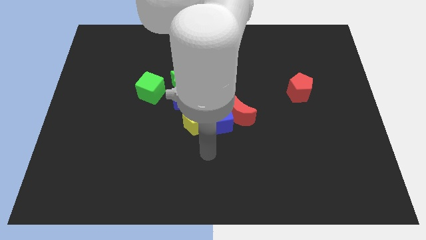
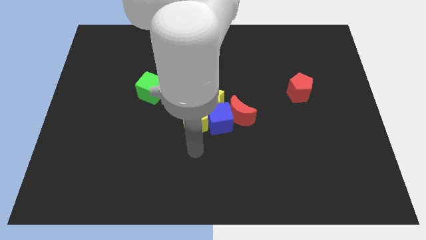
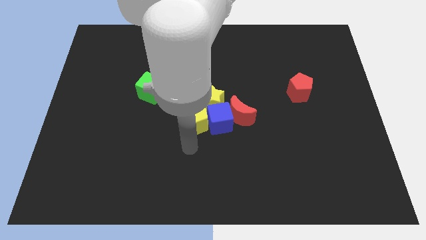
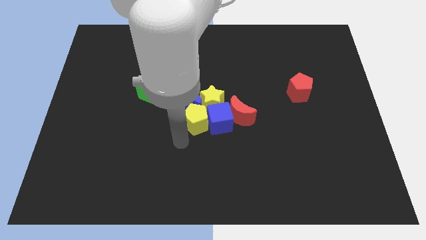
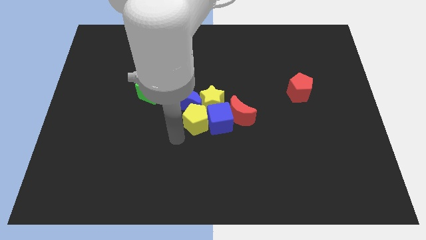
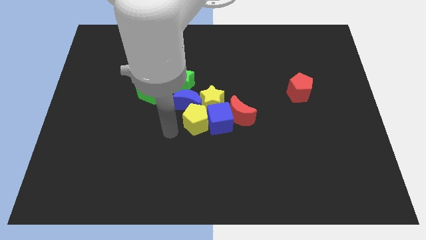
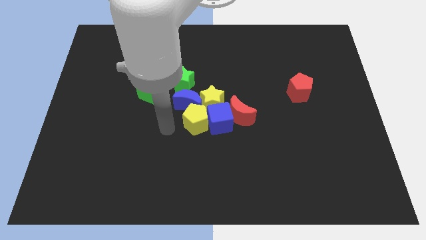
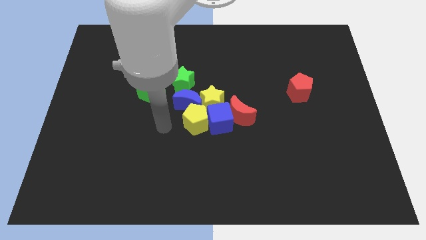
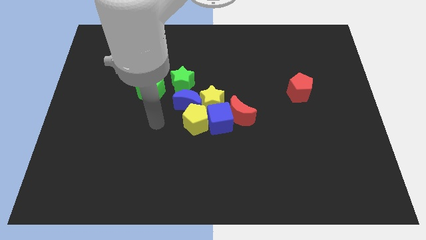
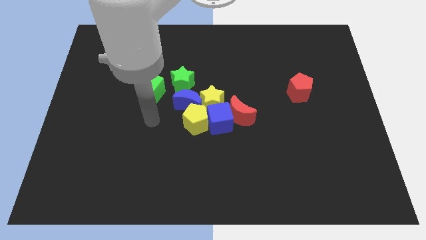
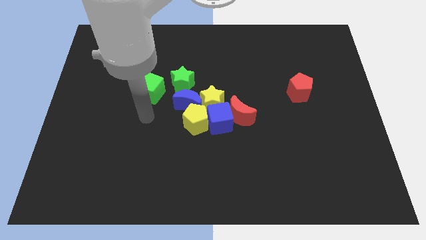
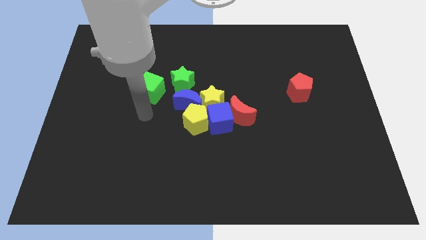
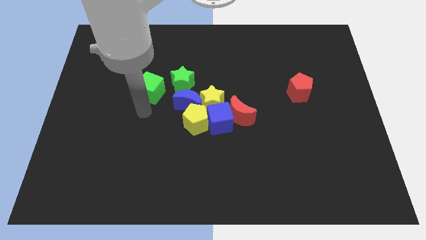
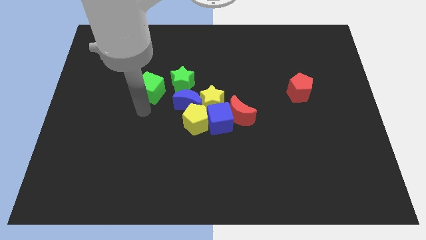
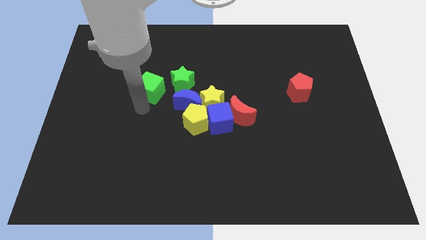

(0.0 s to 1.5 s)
move your arm towards the green cube

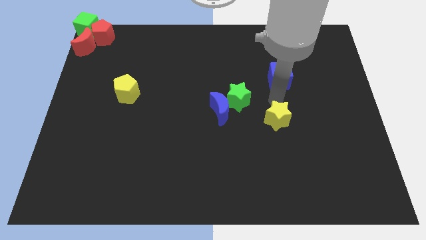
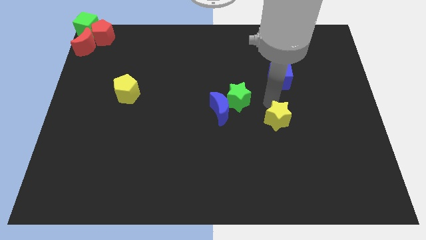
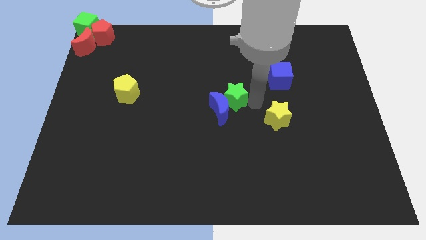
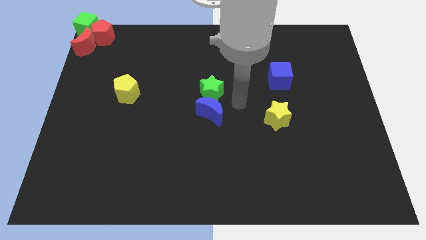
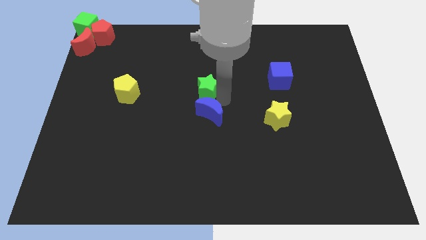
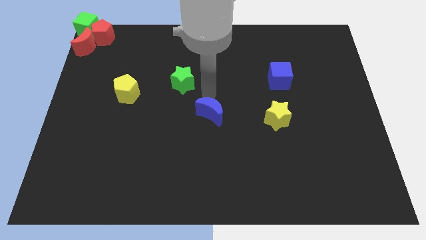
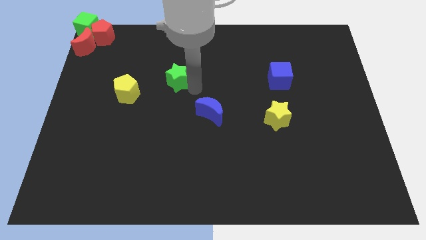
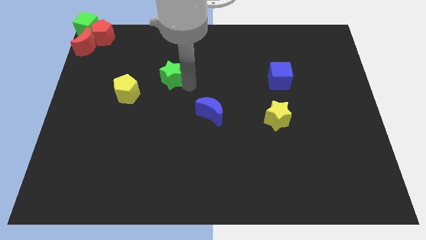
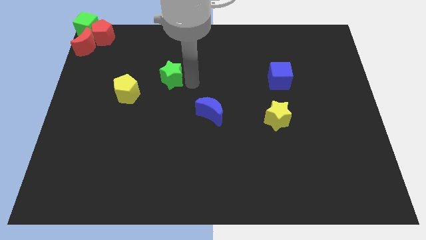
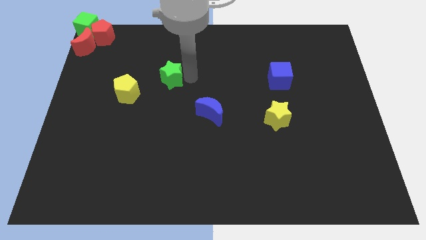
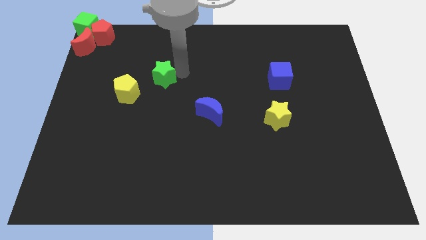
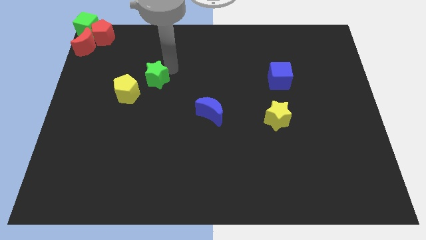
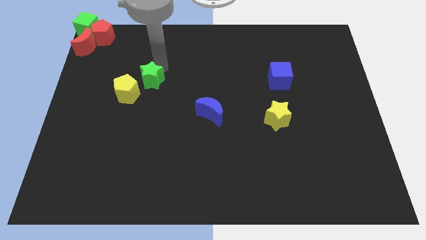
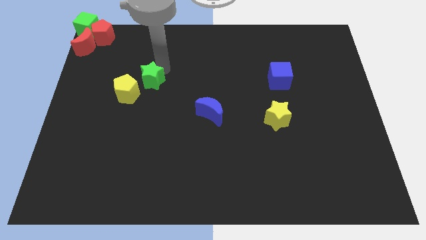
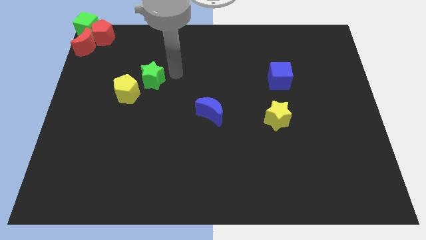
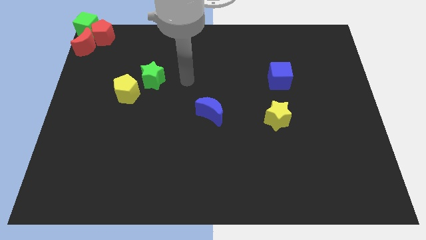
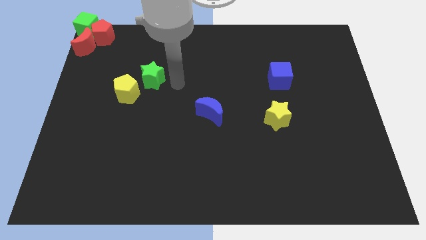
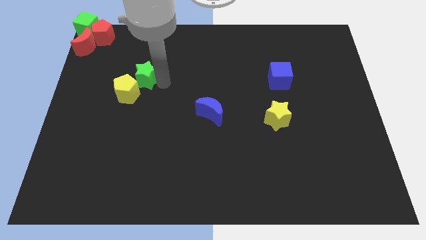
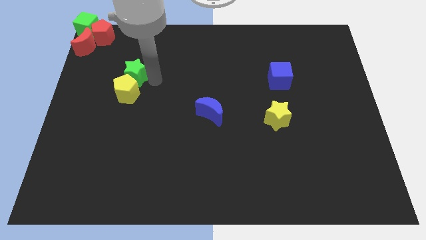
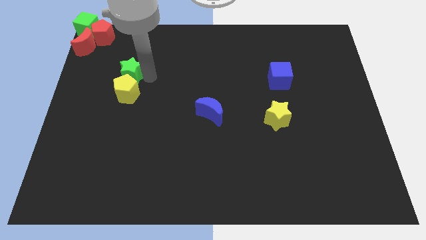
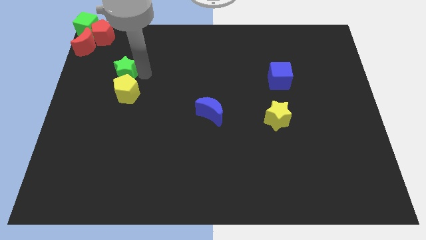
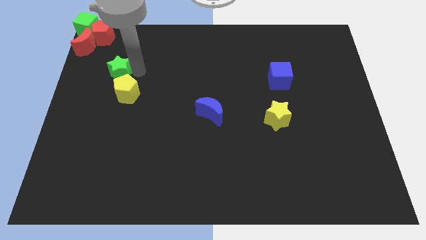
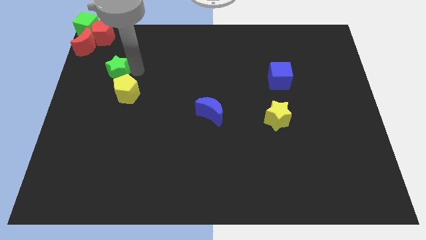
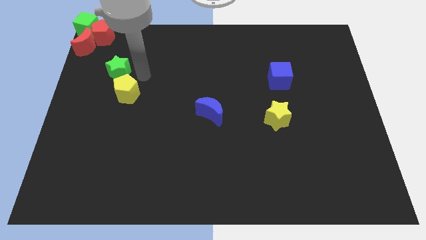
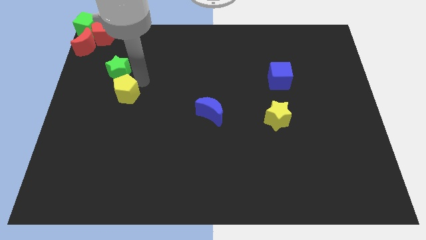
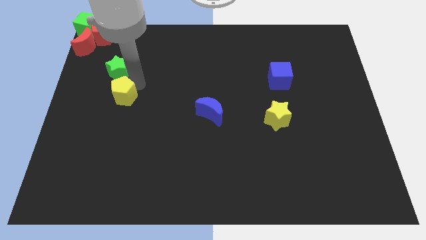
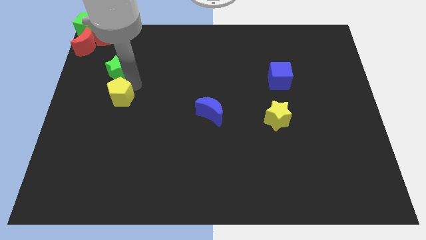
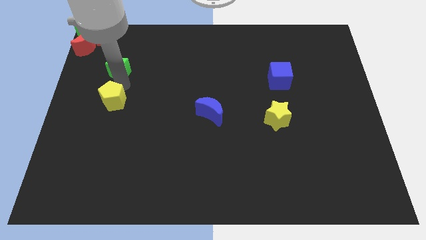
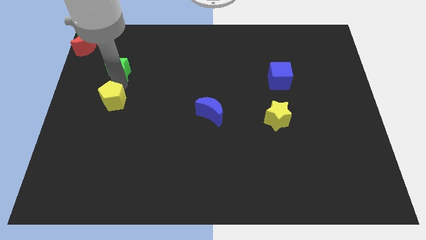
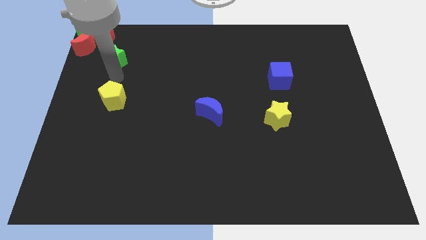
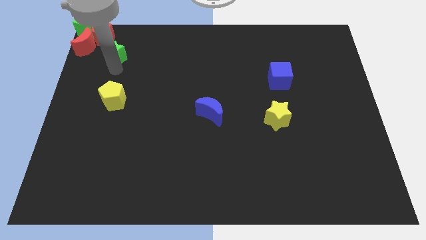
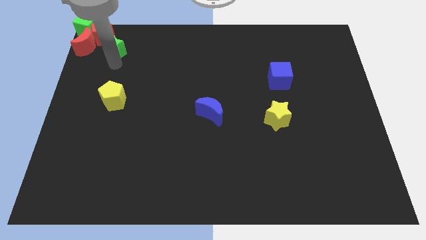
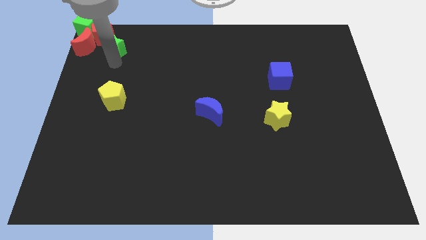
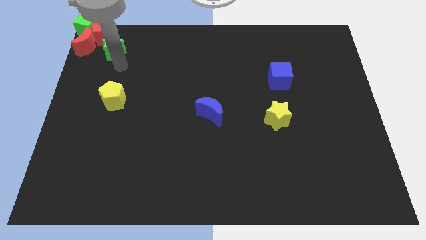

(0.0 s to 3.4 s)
move the green star close to the red pentagon

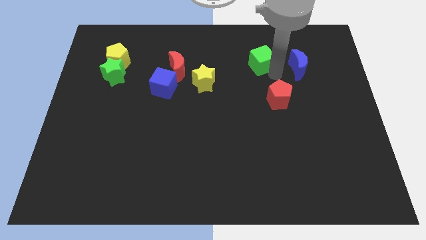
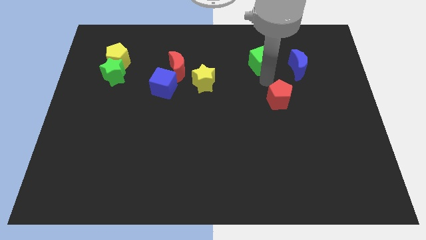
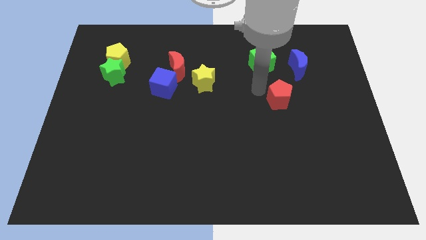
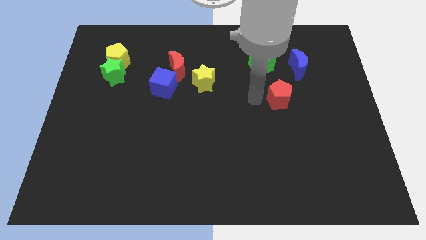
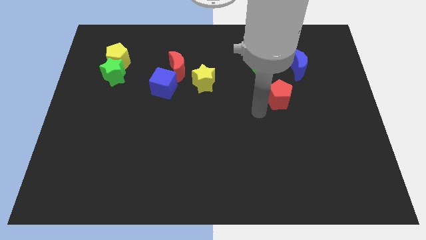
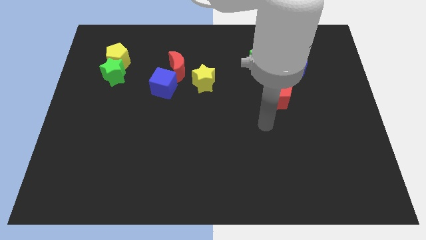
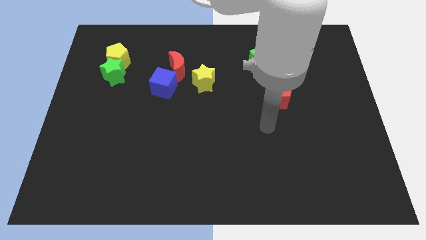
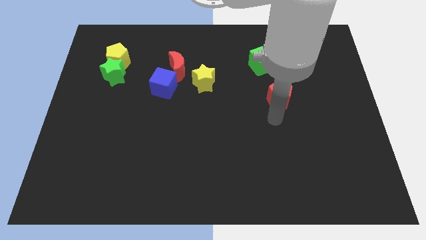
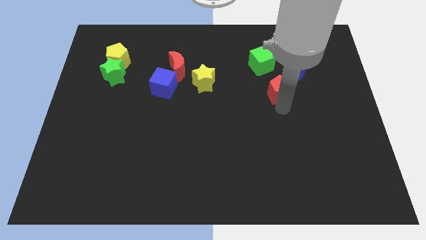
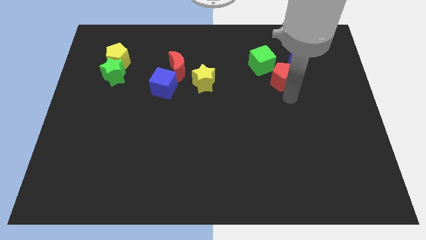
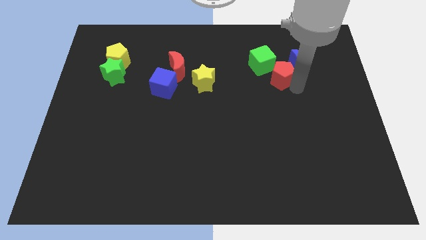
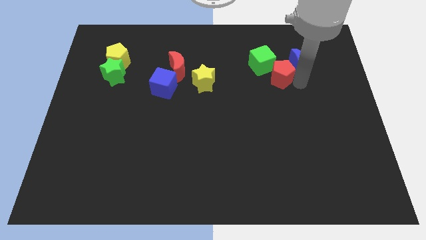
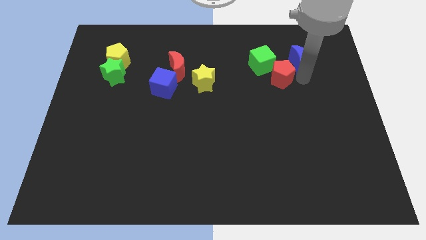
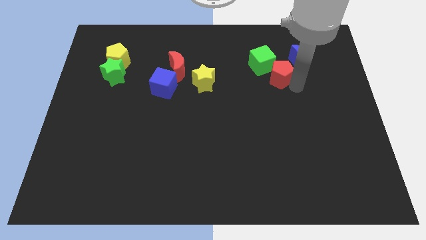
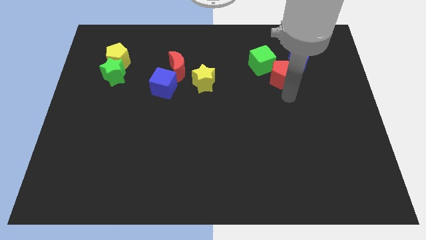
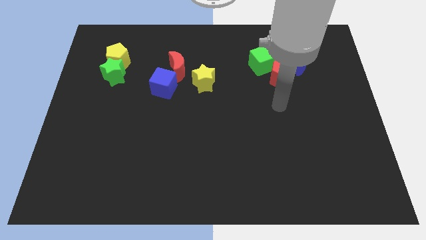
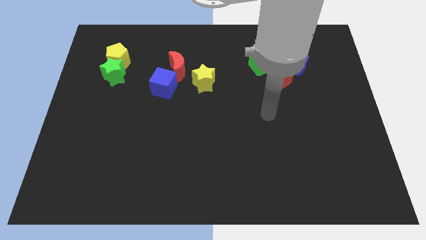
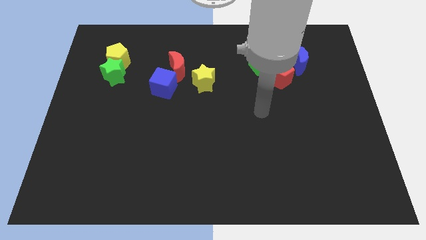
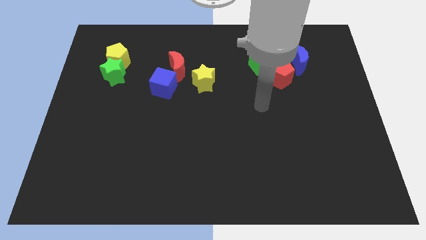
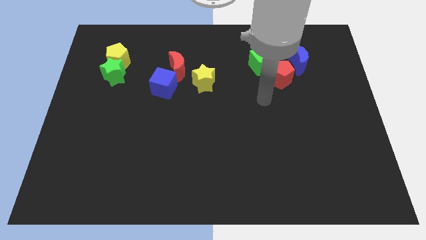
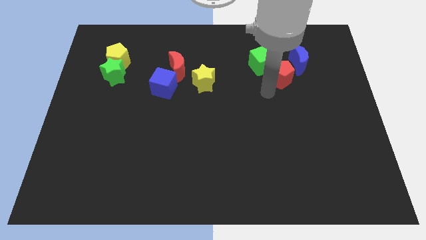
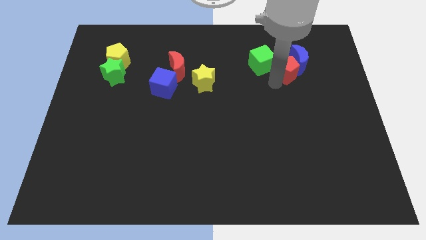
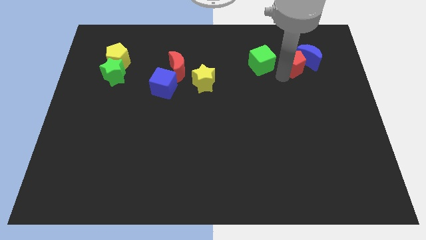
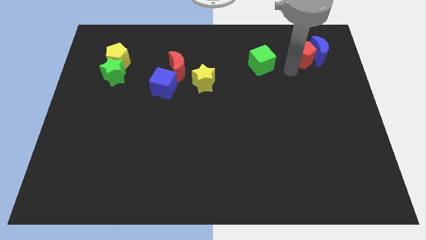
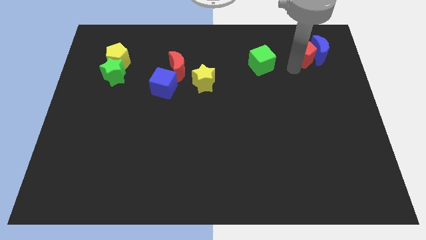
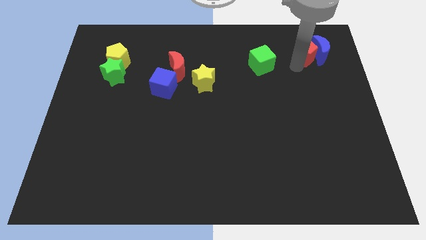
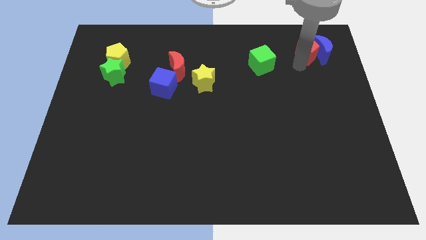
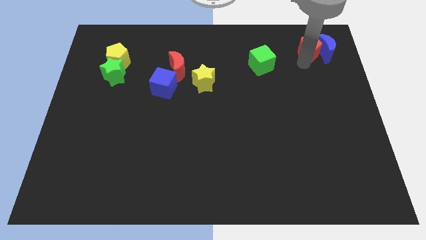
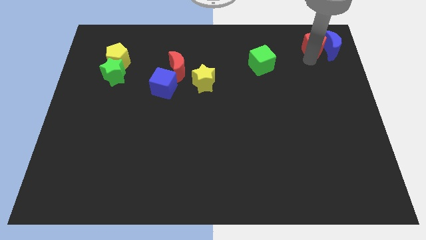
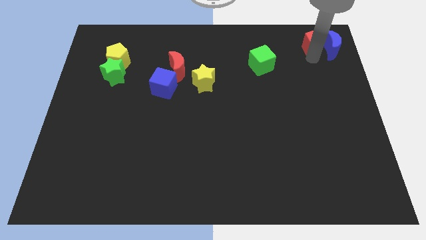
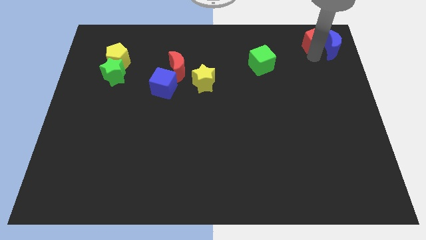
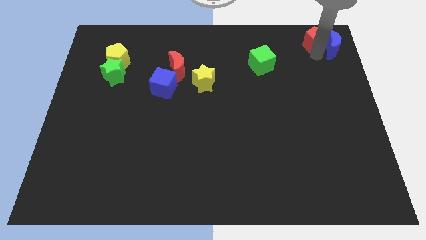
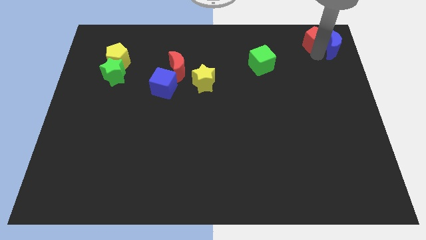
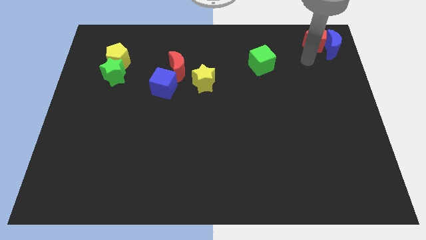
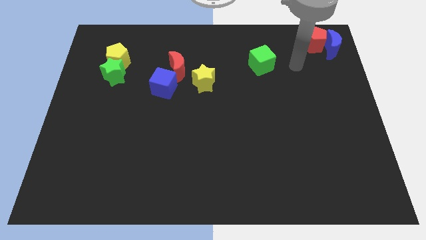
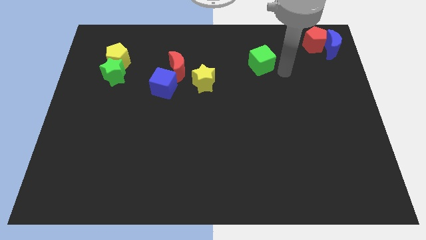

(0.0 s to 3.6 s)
push the blue crescent into the red pentagon to the top right of the board

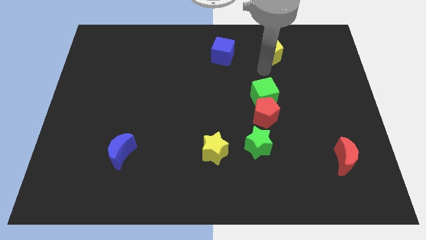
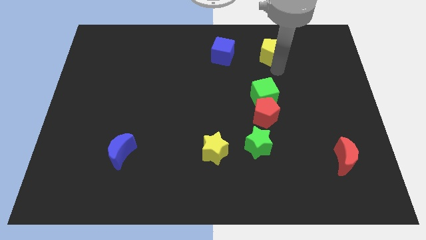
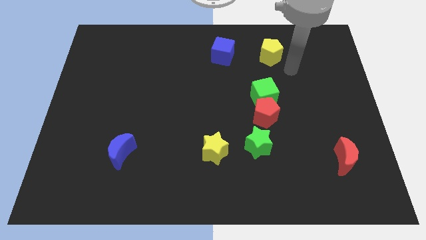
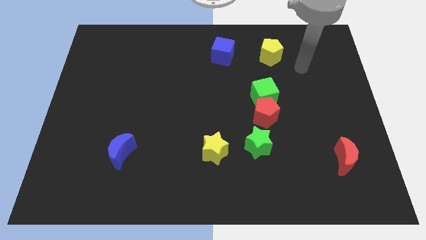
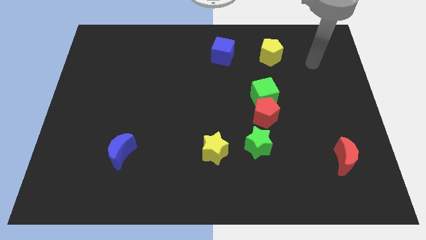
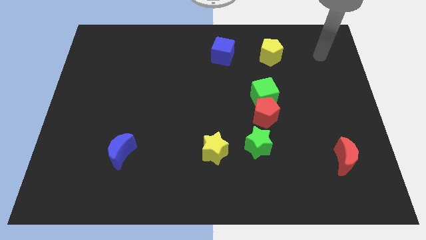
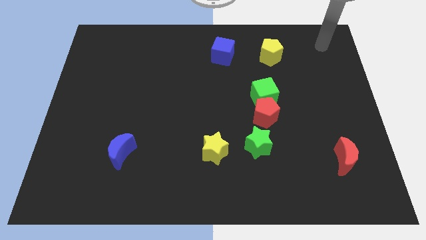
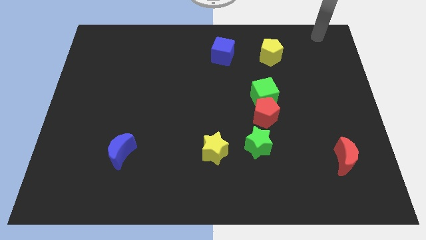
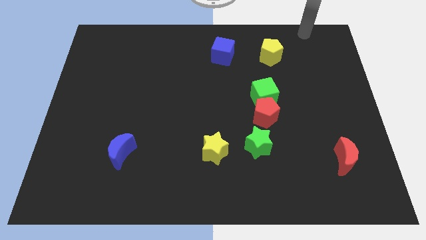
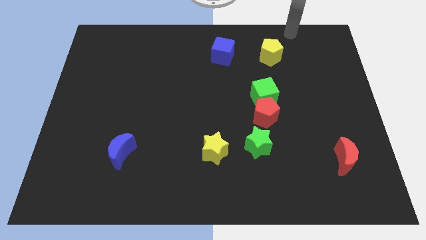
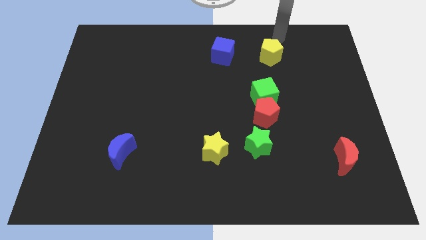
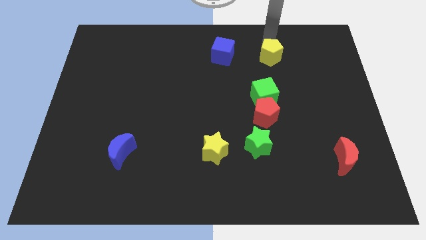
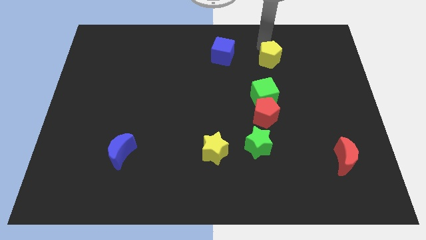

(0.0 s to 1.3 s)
place the arm above the yellow pentagon
